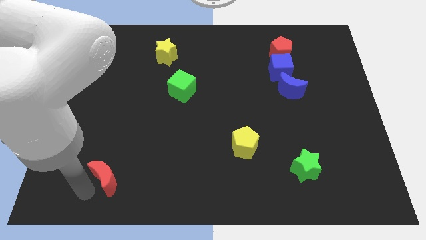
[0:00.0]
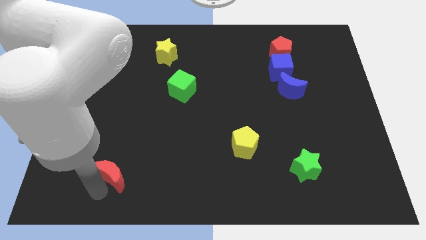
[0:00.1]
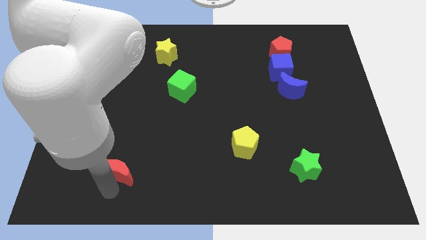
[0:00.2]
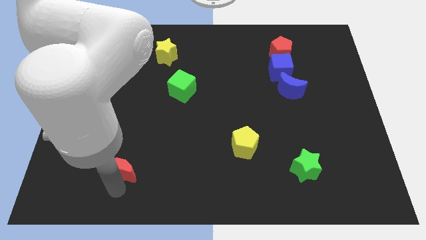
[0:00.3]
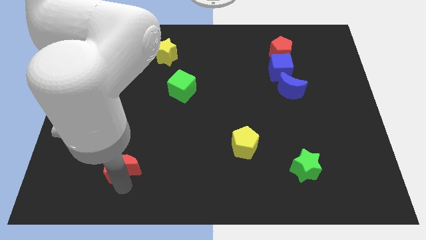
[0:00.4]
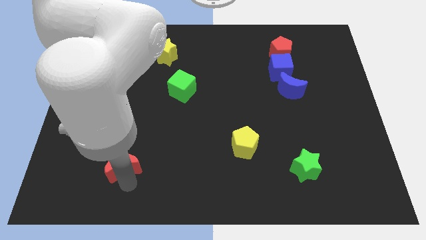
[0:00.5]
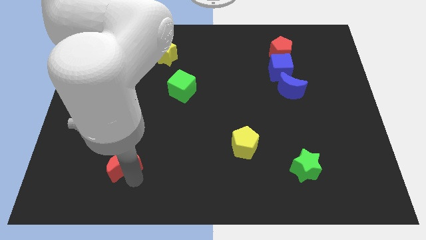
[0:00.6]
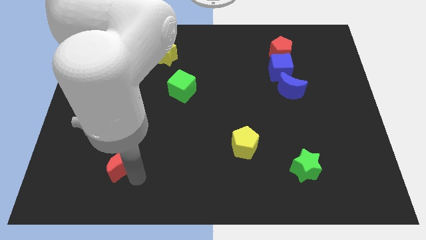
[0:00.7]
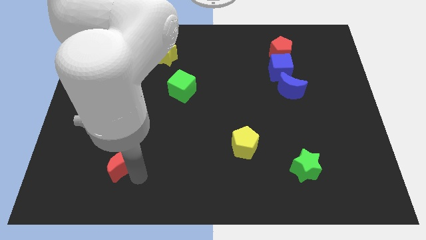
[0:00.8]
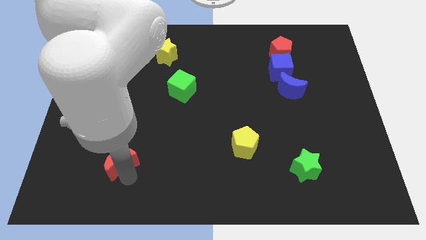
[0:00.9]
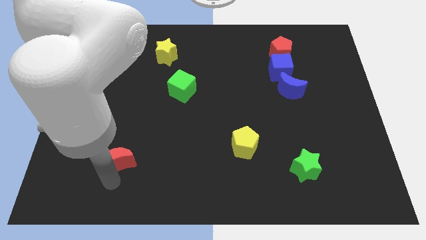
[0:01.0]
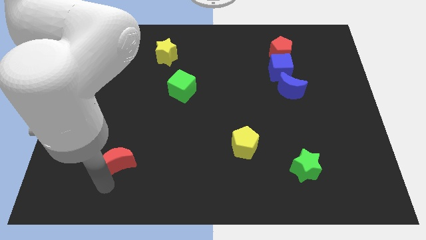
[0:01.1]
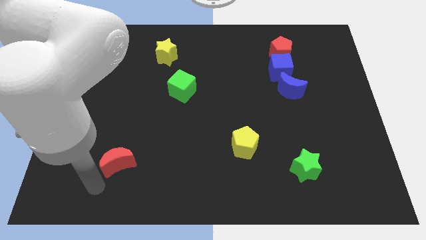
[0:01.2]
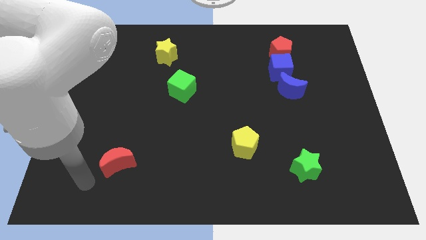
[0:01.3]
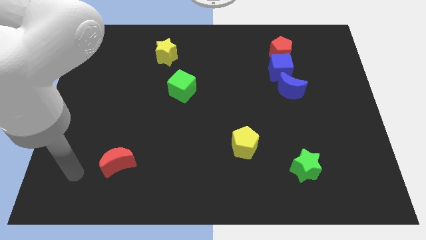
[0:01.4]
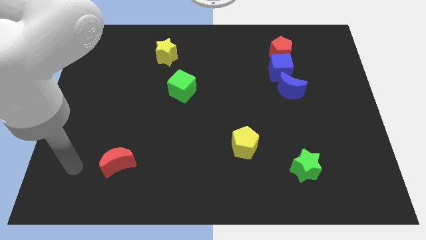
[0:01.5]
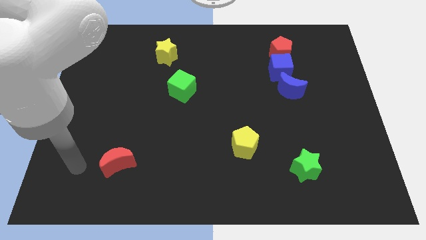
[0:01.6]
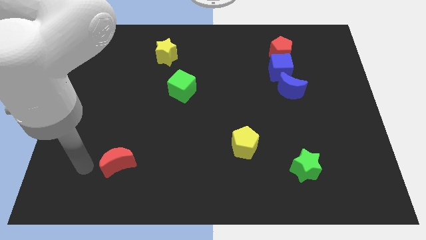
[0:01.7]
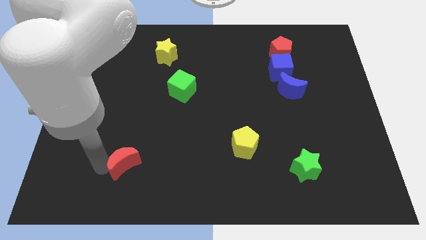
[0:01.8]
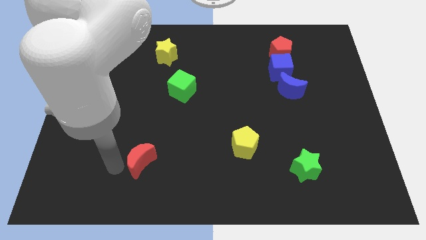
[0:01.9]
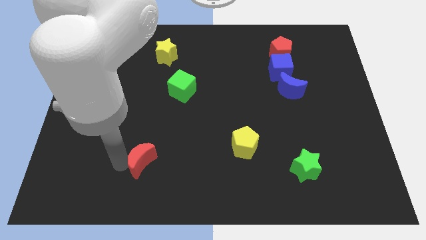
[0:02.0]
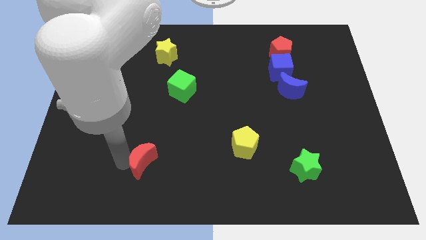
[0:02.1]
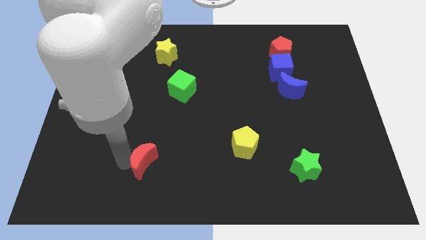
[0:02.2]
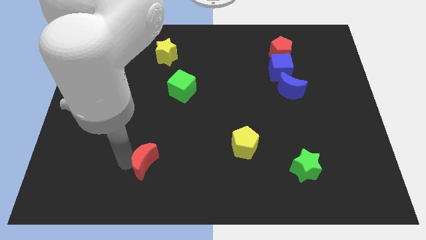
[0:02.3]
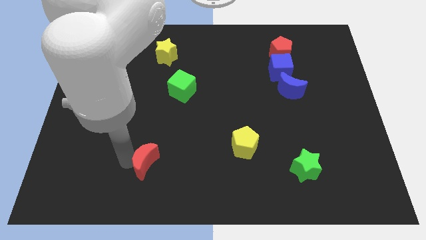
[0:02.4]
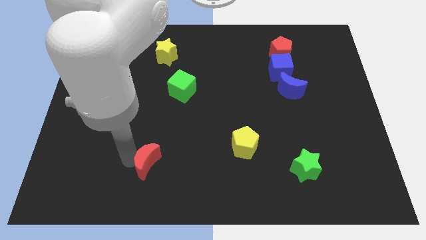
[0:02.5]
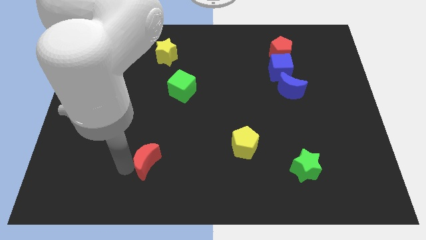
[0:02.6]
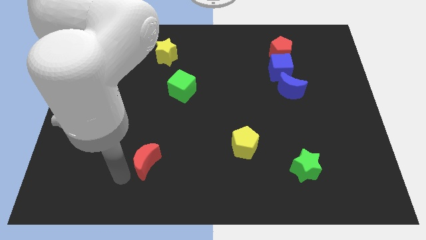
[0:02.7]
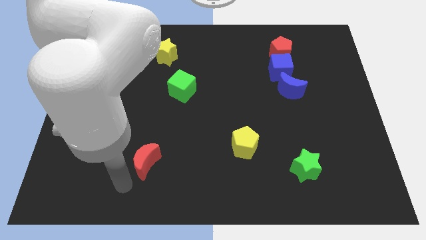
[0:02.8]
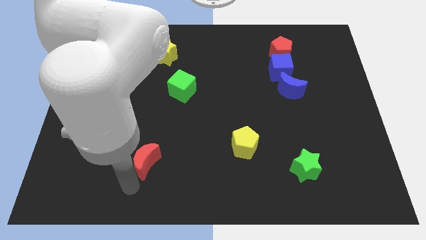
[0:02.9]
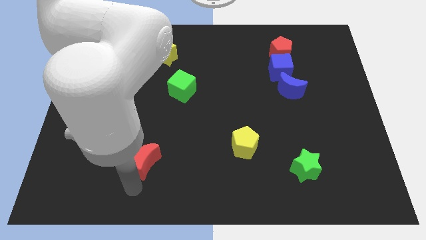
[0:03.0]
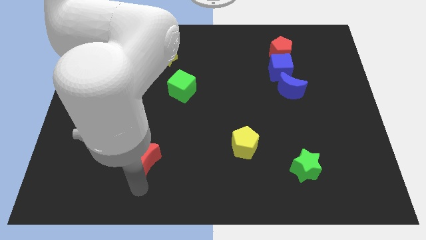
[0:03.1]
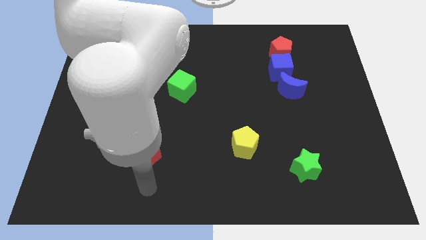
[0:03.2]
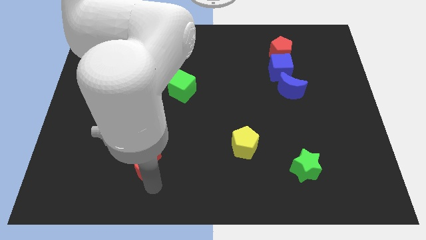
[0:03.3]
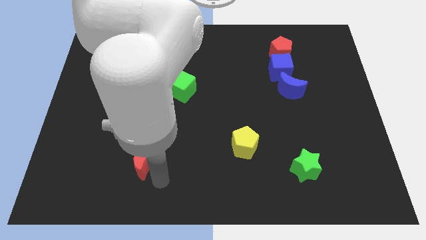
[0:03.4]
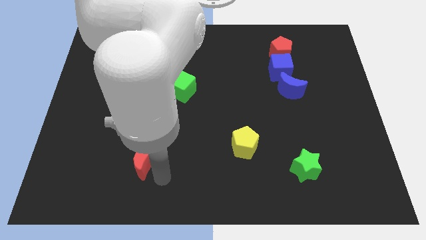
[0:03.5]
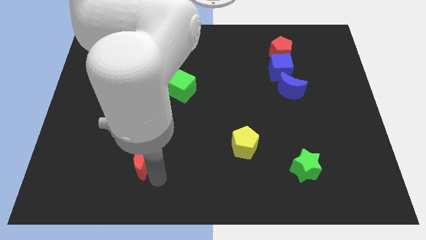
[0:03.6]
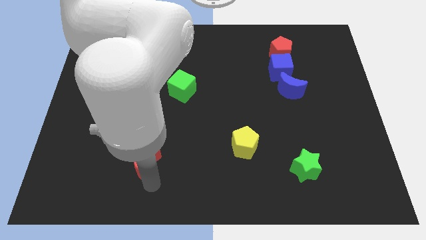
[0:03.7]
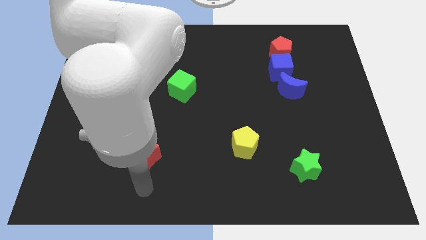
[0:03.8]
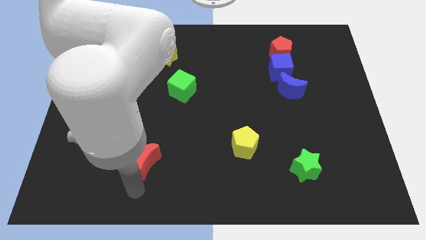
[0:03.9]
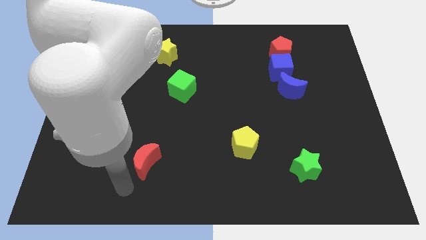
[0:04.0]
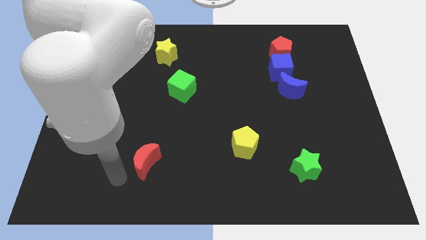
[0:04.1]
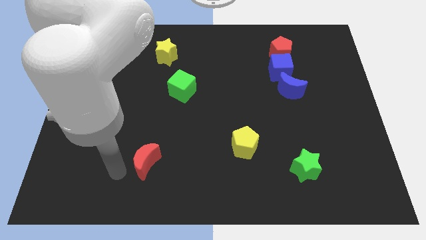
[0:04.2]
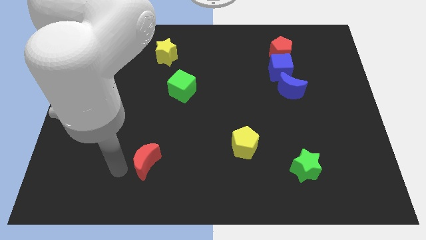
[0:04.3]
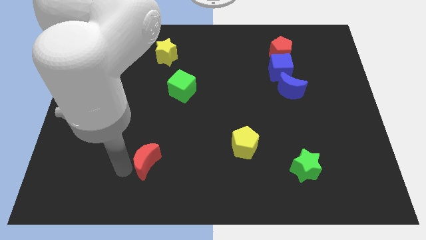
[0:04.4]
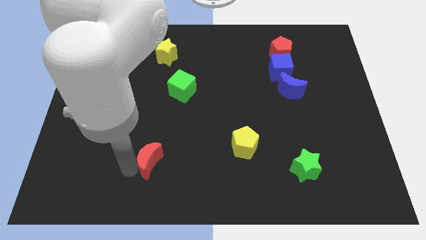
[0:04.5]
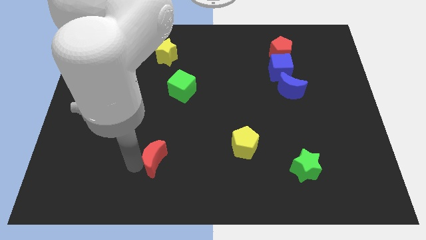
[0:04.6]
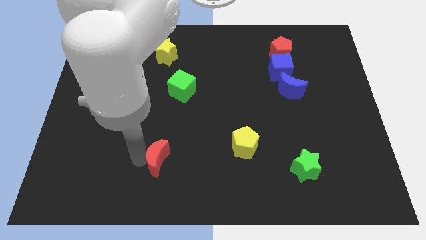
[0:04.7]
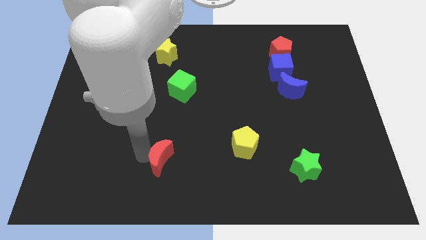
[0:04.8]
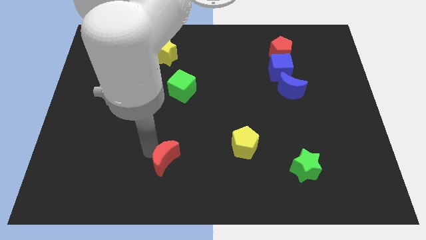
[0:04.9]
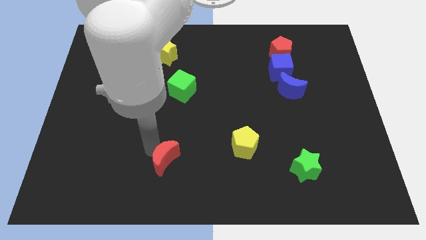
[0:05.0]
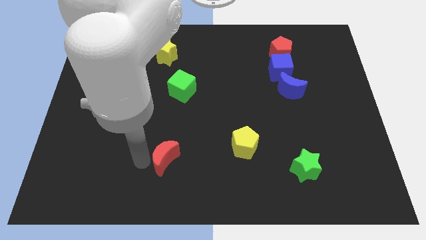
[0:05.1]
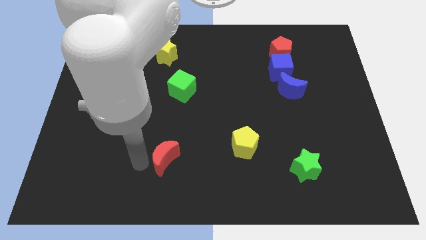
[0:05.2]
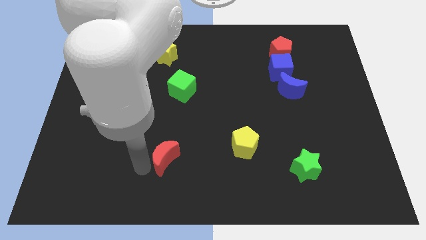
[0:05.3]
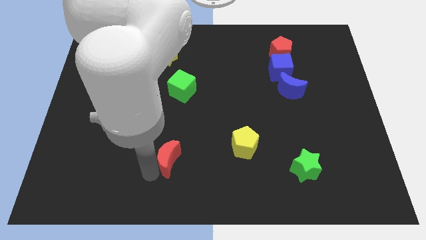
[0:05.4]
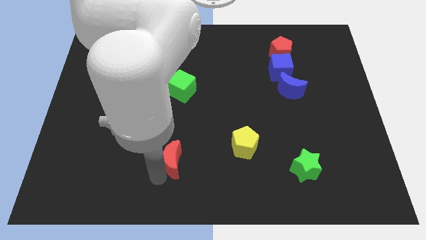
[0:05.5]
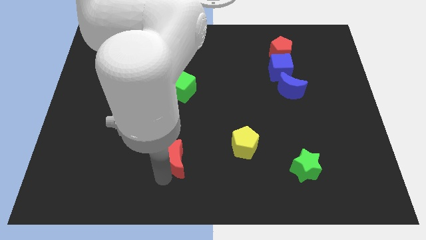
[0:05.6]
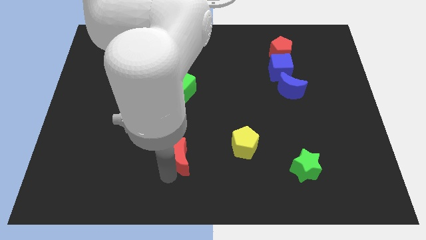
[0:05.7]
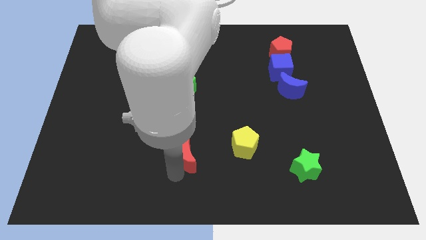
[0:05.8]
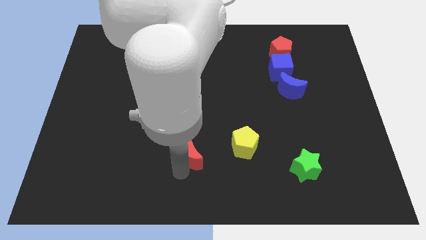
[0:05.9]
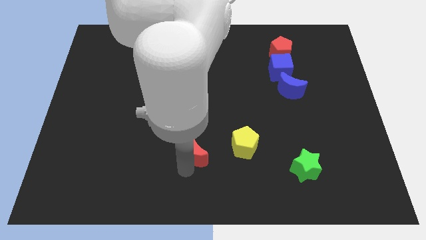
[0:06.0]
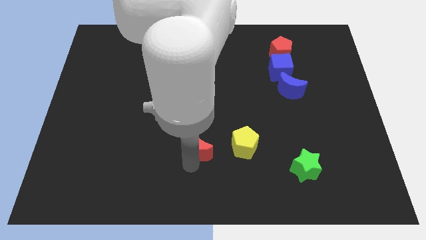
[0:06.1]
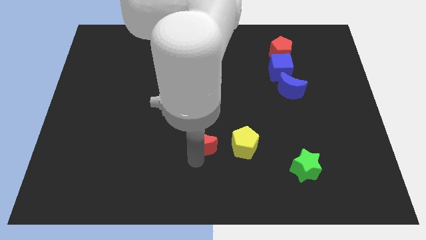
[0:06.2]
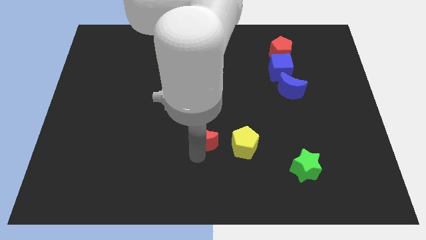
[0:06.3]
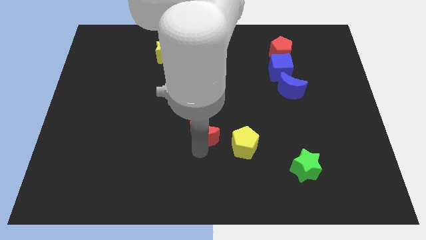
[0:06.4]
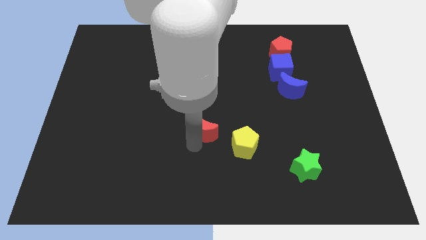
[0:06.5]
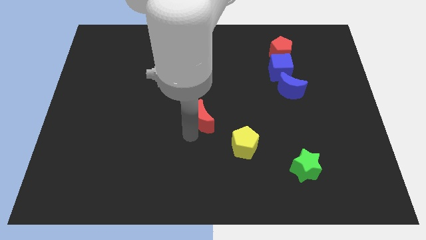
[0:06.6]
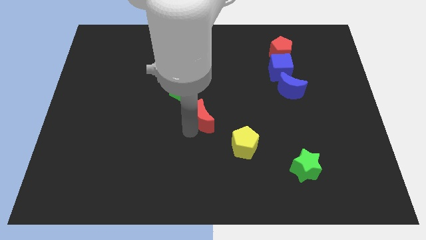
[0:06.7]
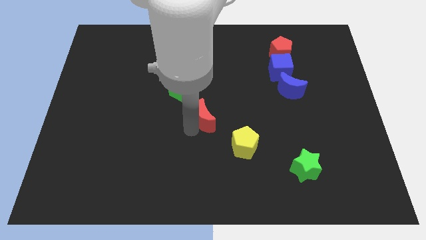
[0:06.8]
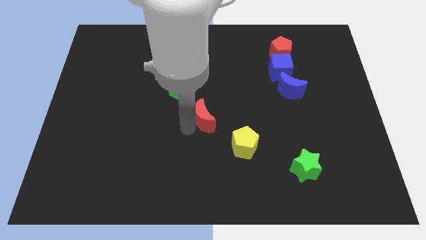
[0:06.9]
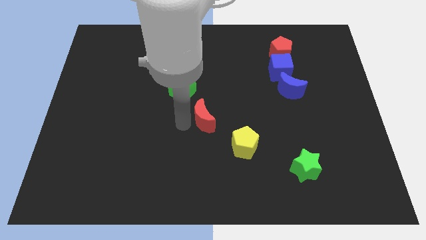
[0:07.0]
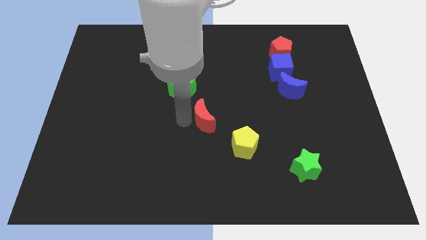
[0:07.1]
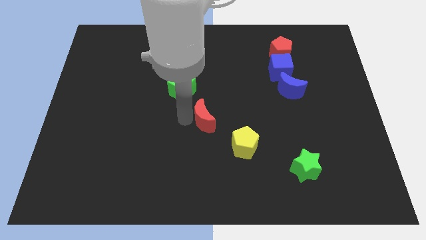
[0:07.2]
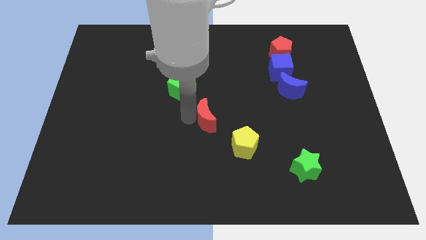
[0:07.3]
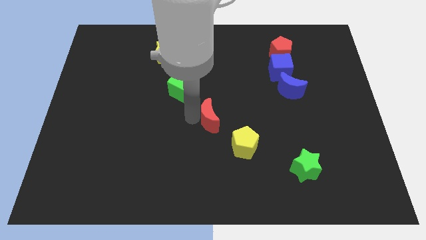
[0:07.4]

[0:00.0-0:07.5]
move the red crescent diagonally top left to the yellow pentagon

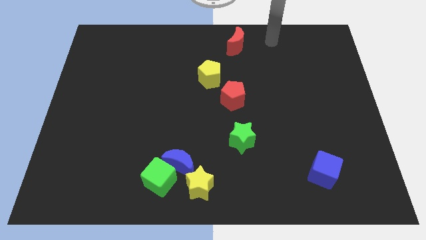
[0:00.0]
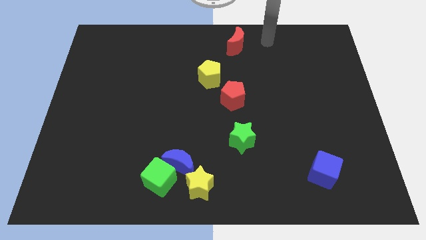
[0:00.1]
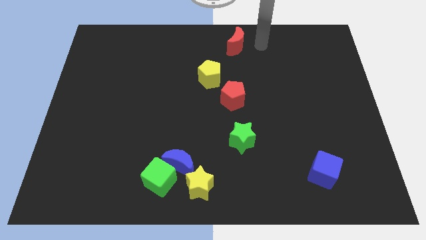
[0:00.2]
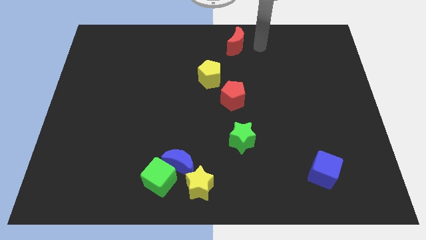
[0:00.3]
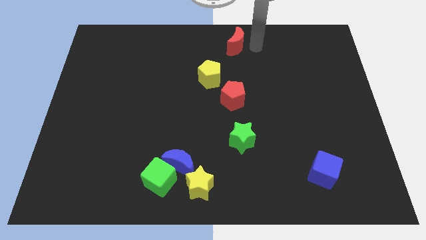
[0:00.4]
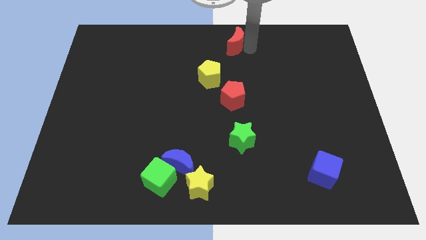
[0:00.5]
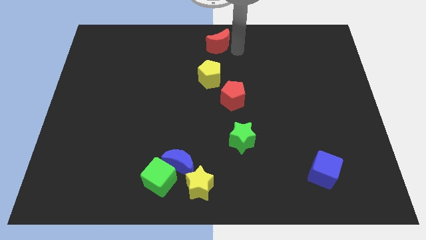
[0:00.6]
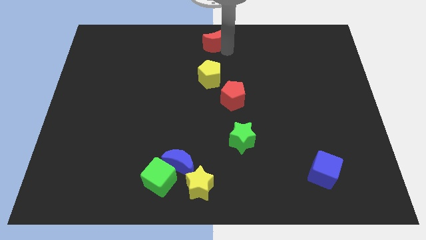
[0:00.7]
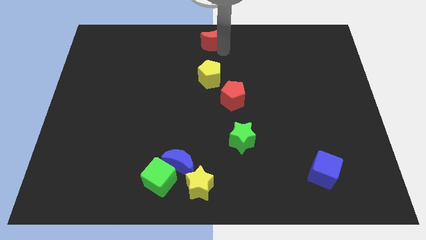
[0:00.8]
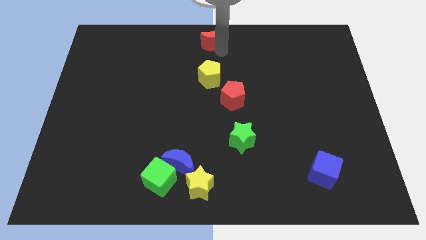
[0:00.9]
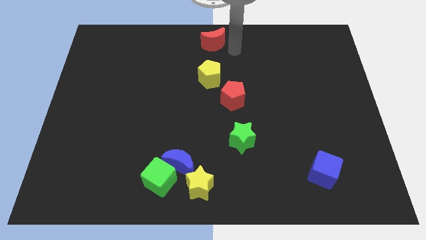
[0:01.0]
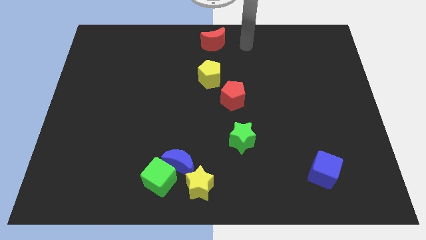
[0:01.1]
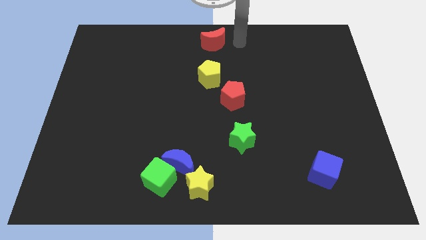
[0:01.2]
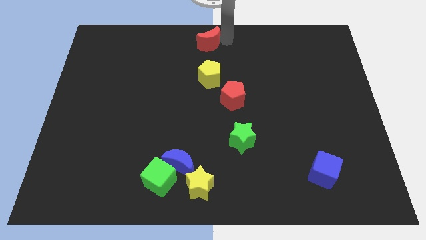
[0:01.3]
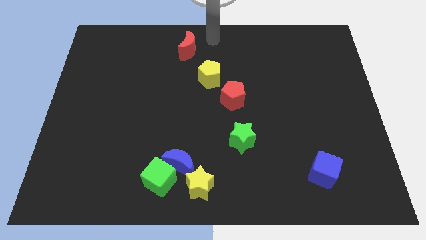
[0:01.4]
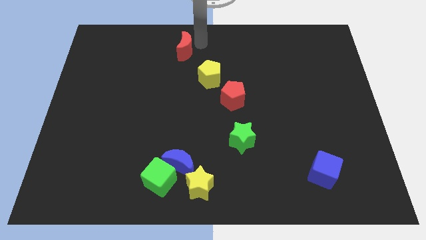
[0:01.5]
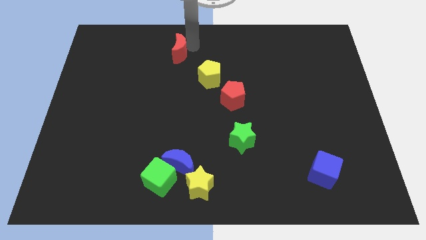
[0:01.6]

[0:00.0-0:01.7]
move the red crescent to the top left of the yellow pentagon

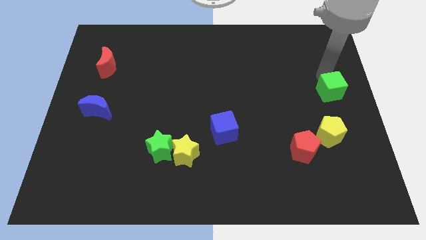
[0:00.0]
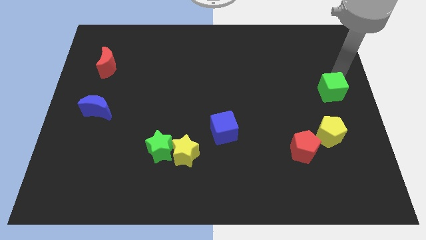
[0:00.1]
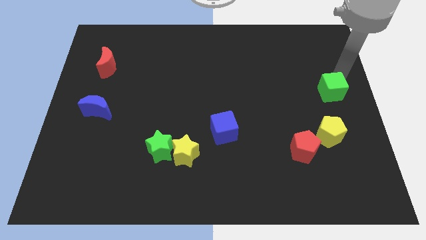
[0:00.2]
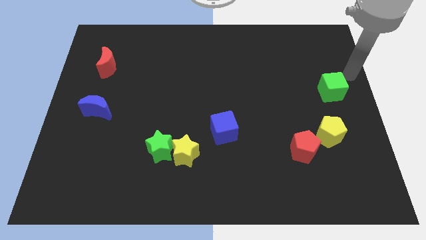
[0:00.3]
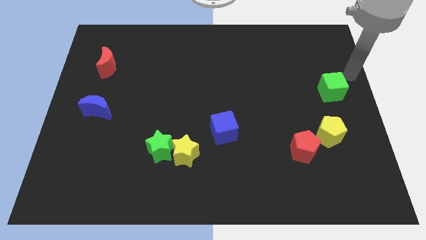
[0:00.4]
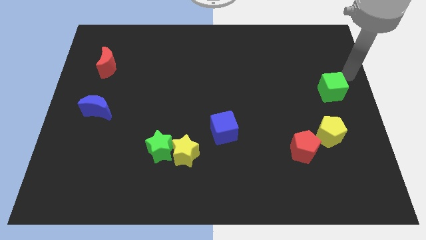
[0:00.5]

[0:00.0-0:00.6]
place arm close to green cube
